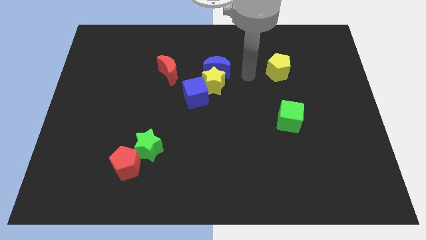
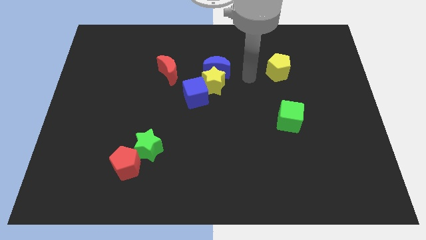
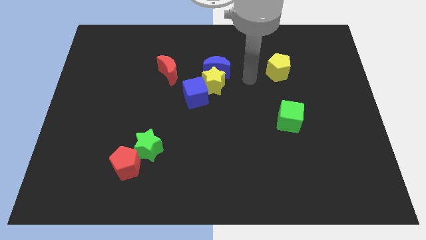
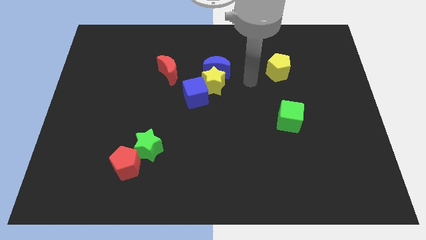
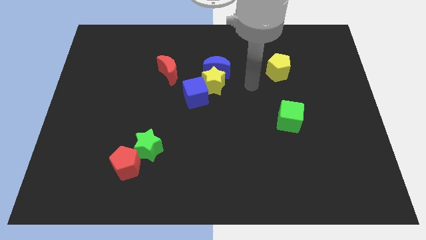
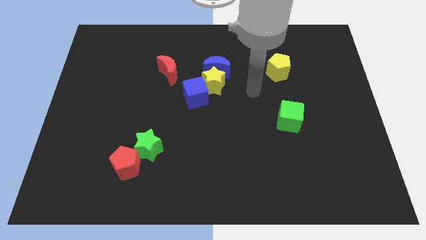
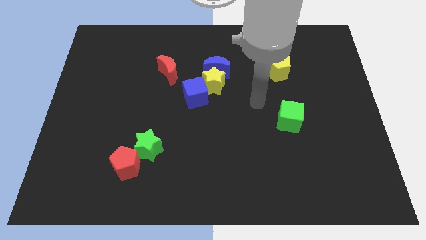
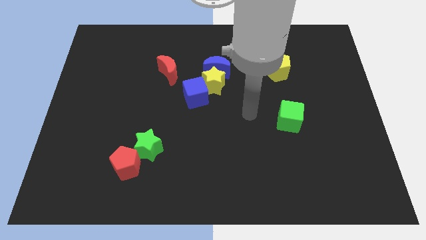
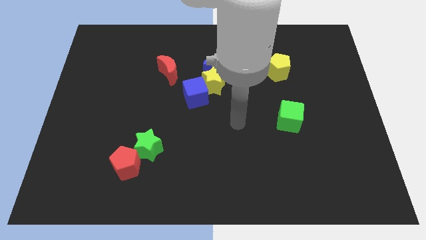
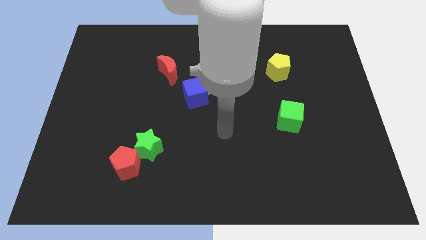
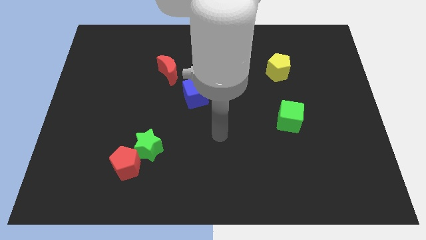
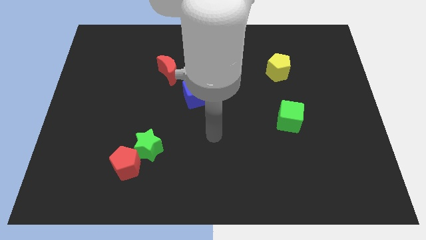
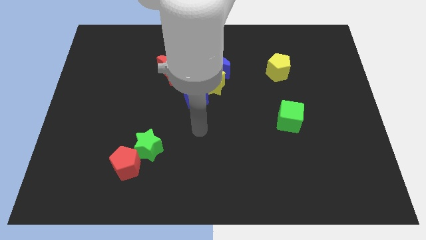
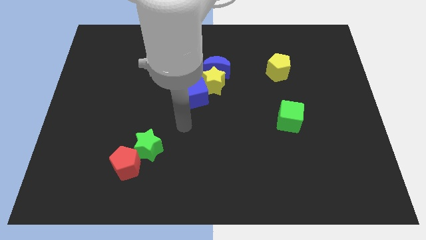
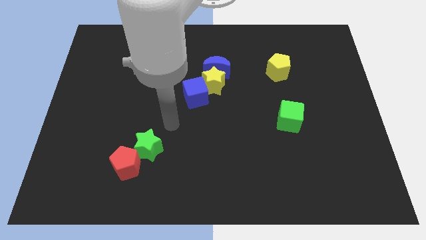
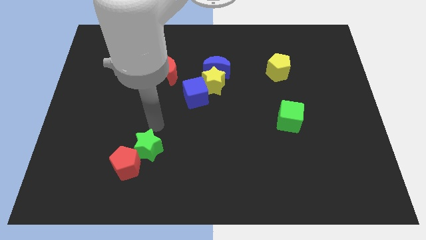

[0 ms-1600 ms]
point your arm above the green star

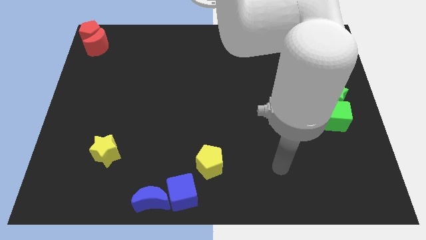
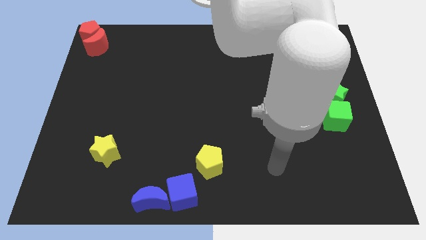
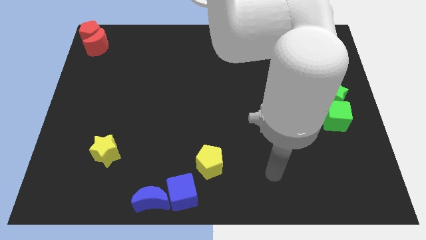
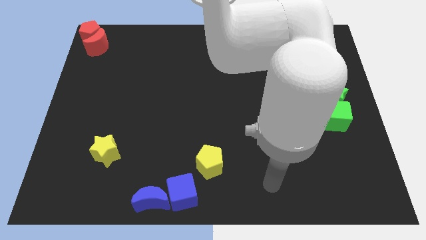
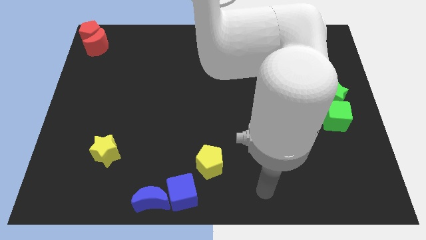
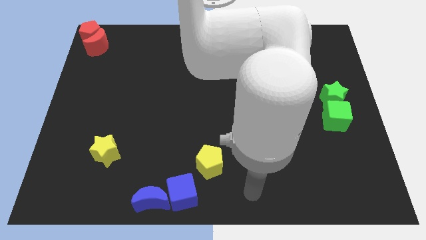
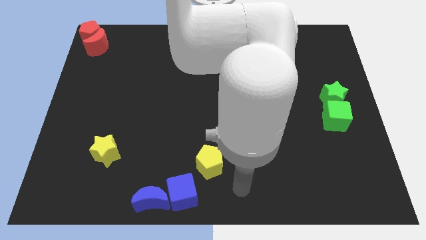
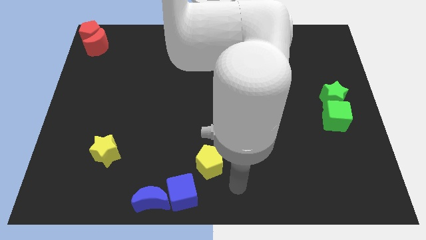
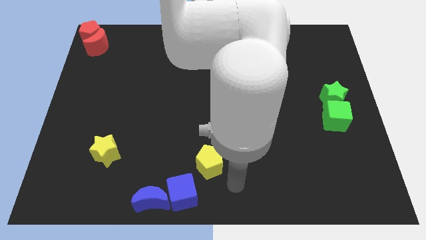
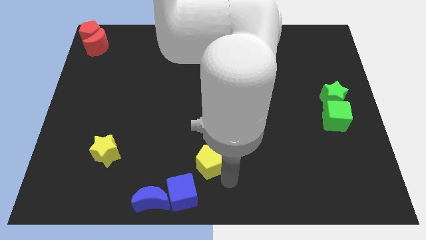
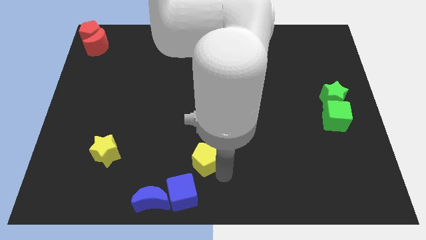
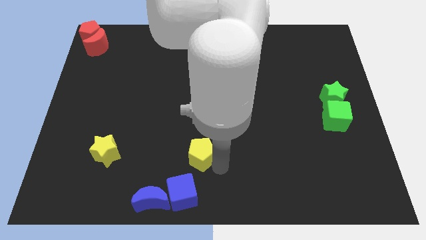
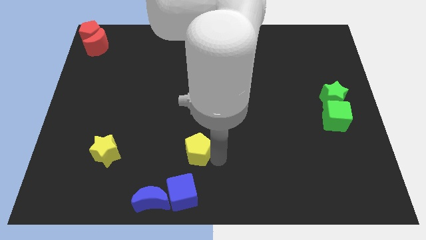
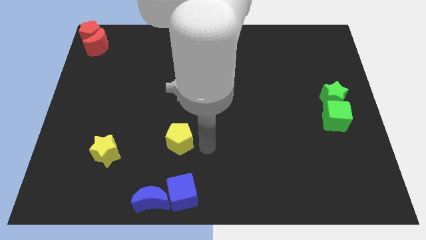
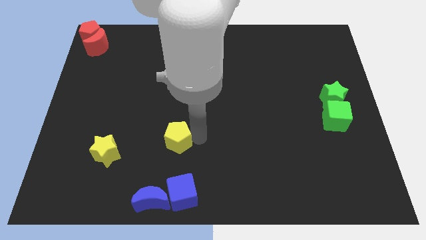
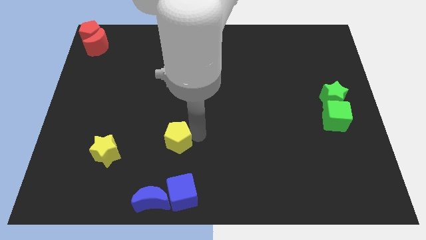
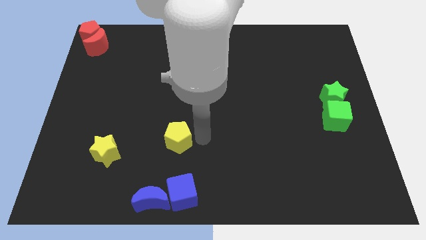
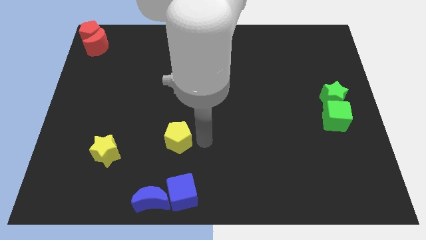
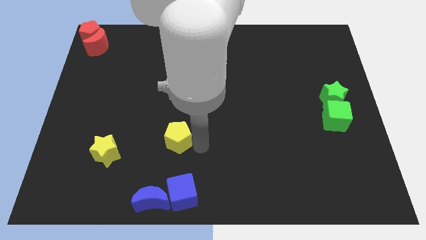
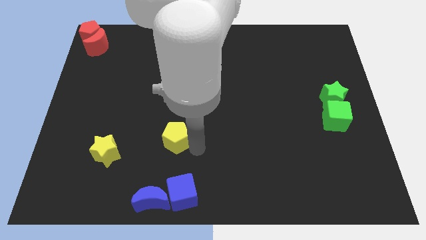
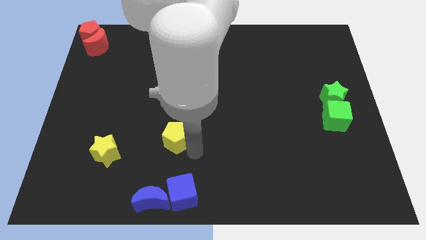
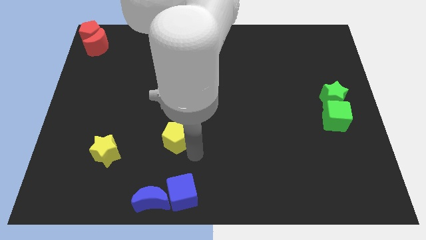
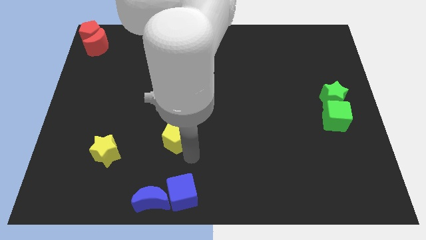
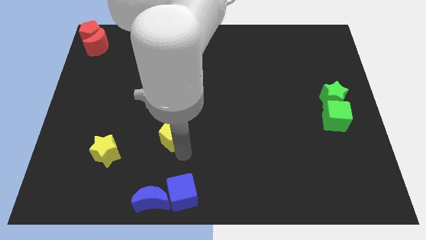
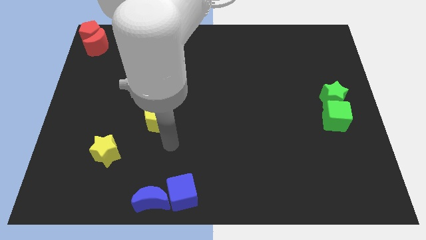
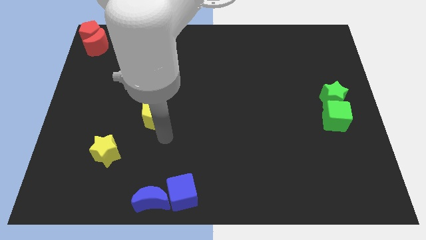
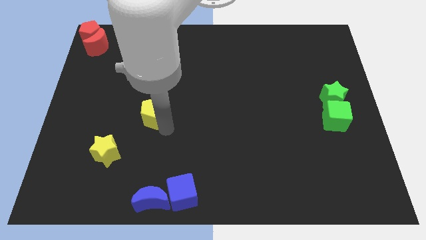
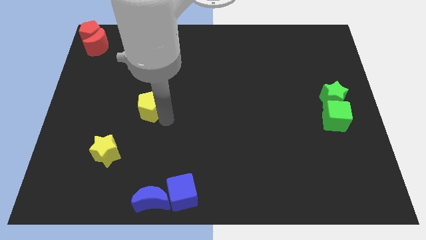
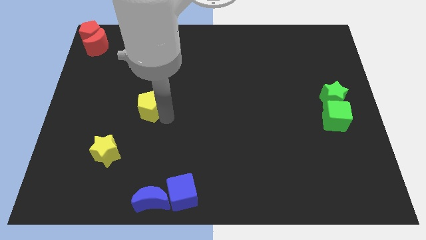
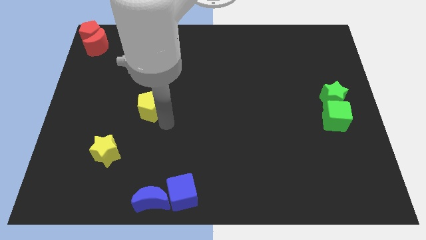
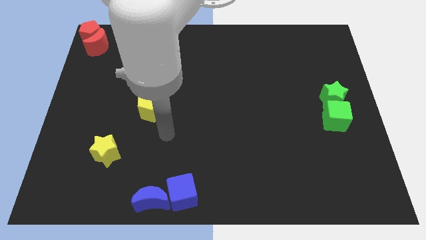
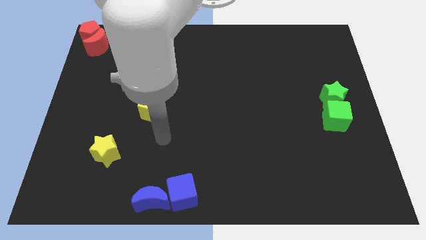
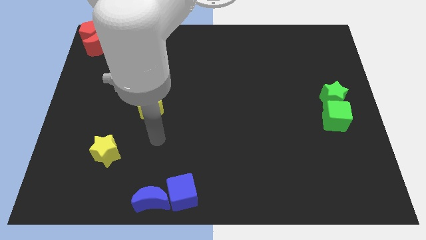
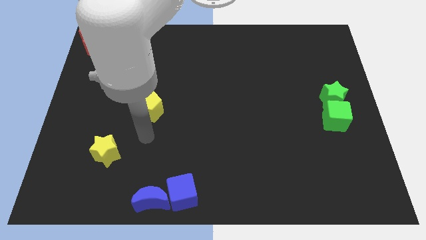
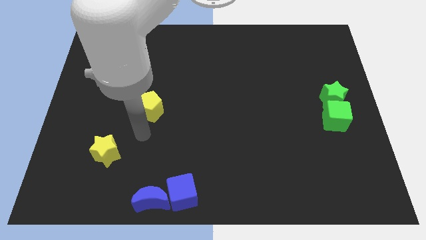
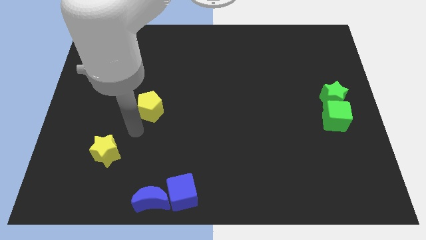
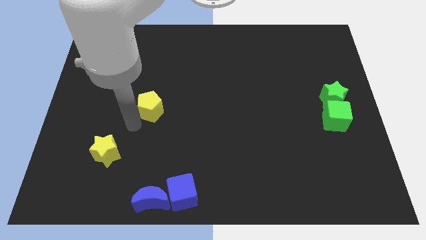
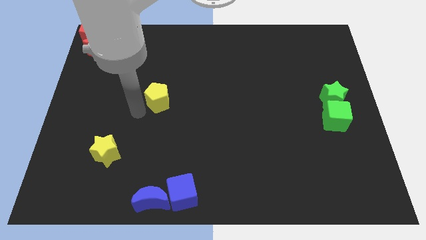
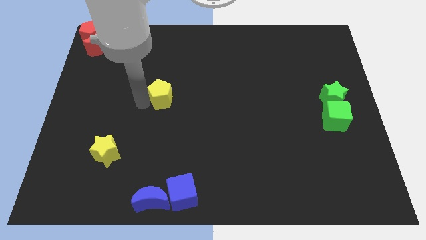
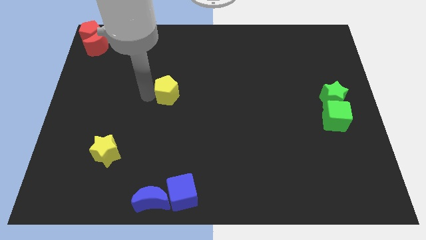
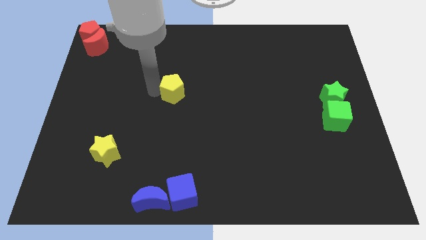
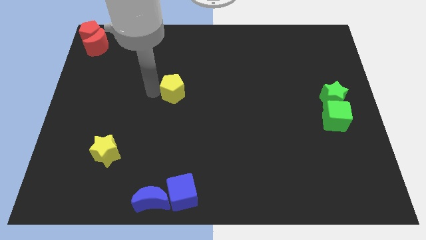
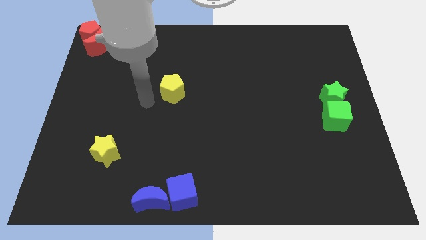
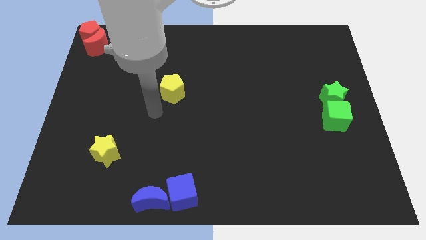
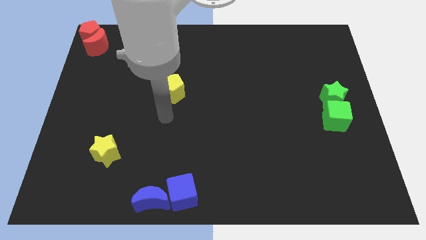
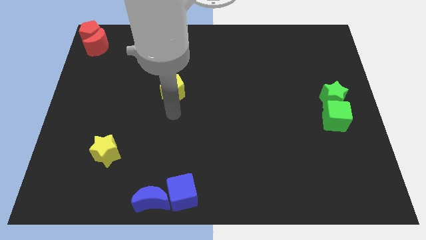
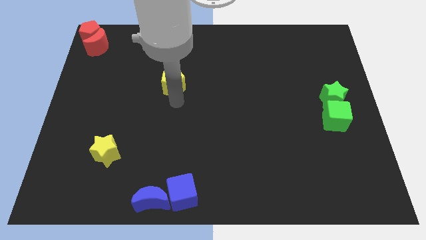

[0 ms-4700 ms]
place the yellow pentagon vertically above the blue cube

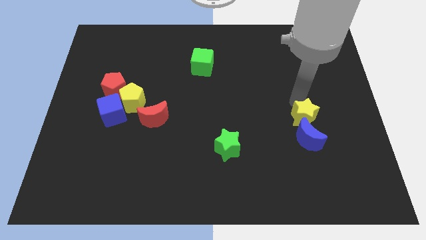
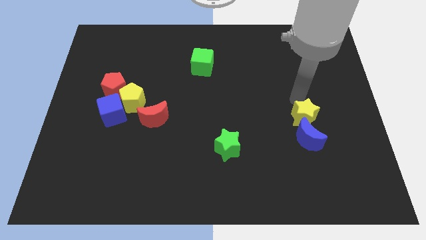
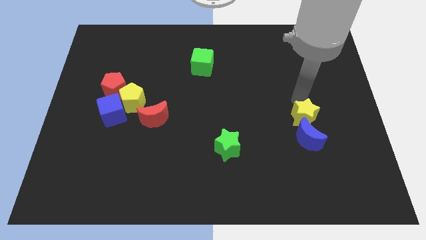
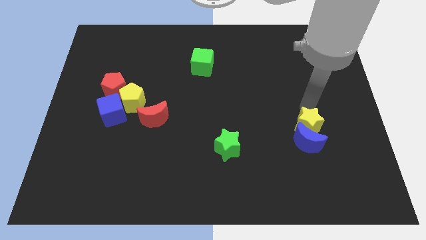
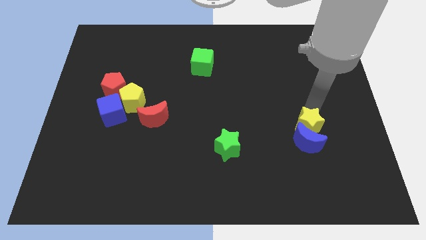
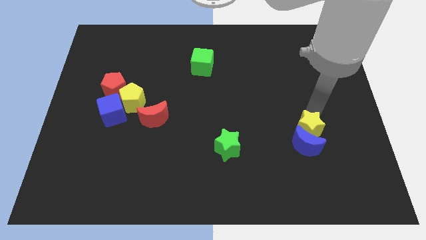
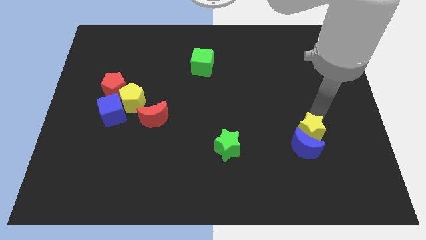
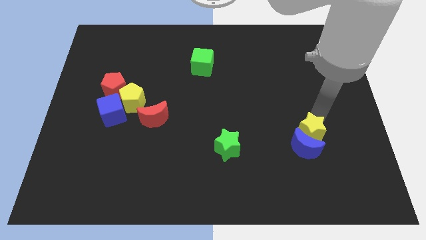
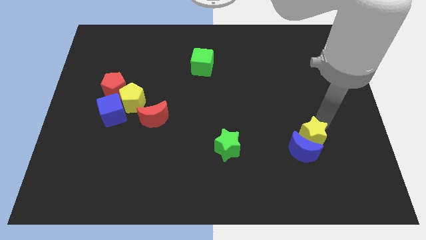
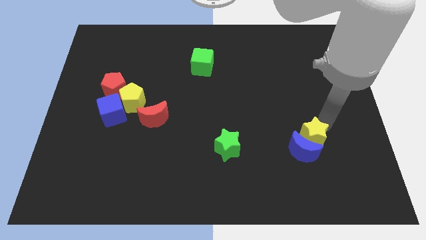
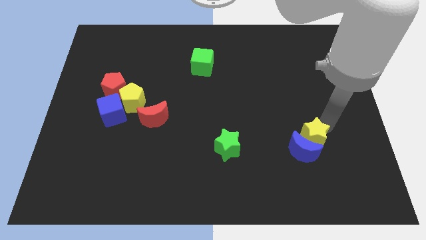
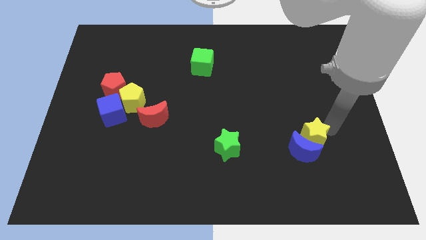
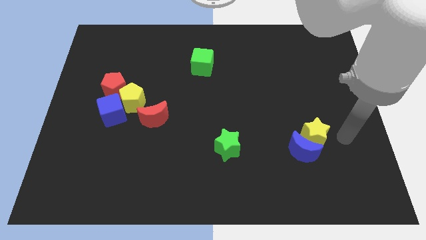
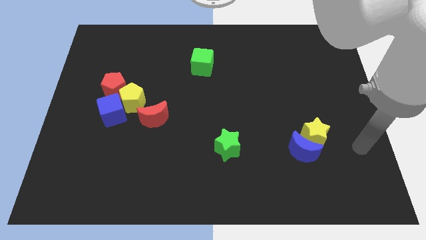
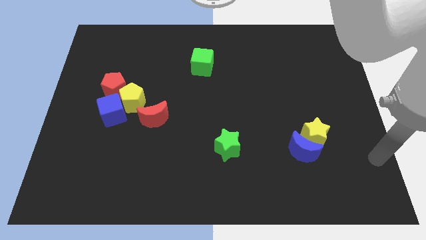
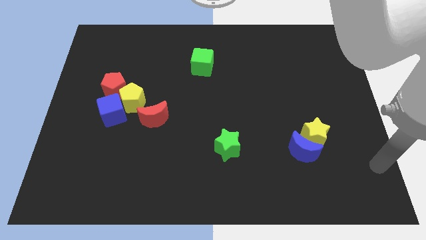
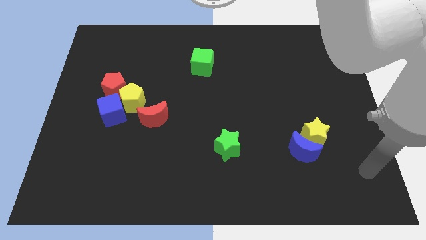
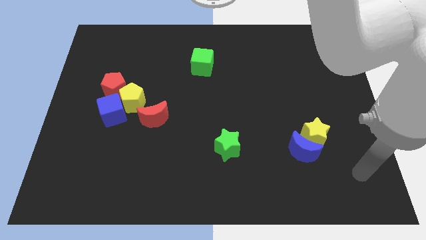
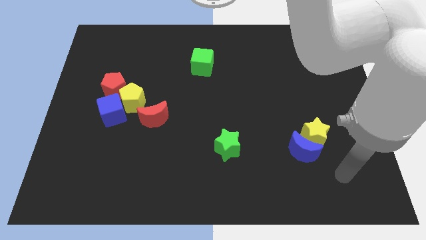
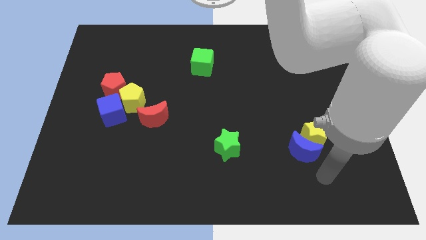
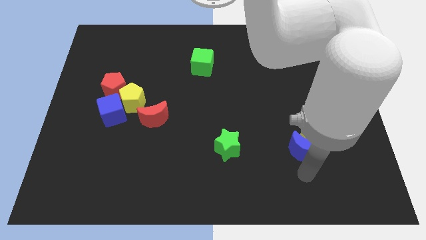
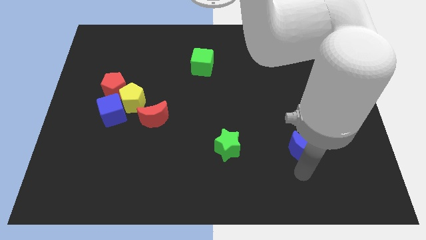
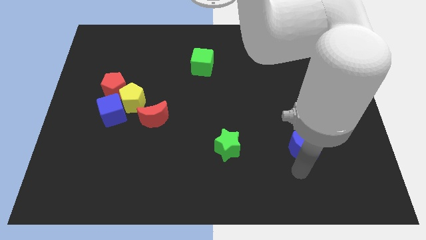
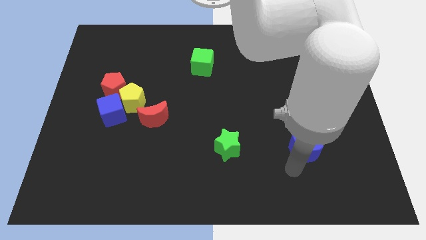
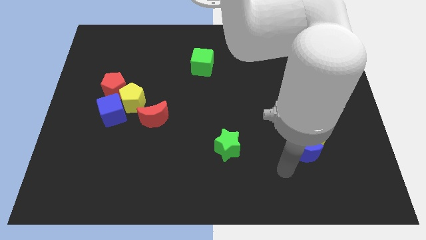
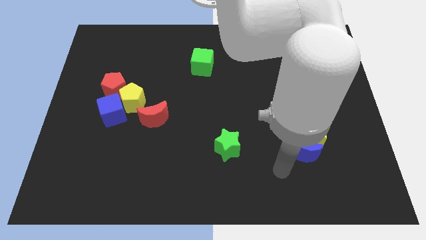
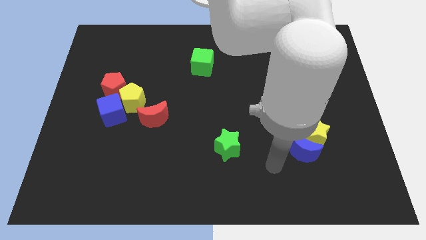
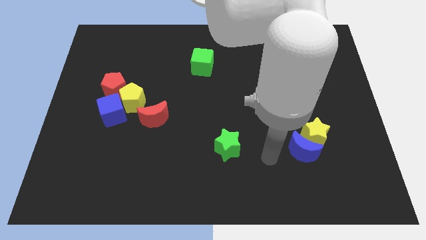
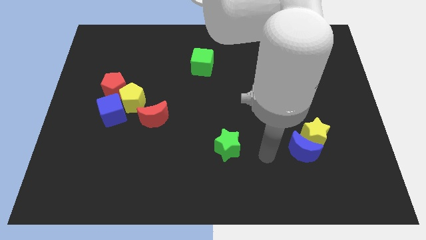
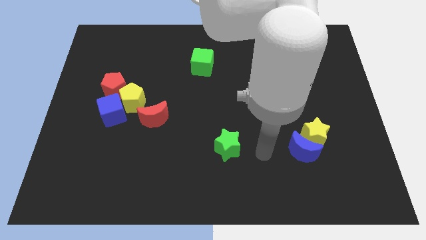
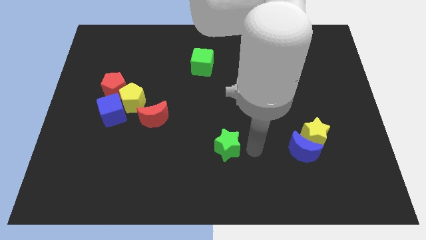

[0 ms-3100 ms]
push the blue crescent with yellow star
